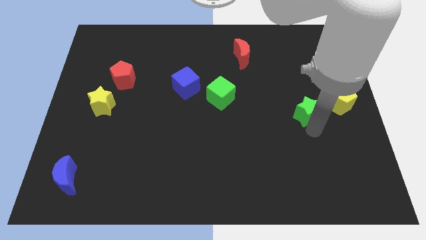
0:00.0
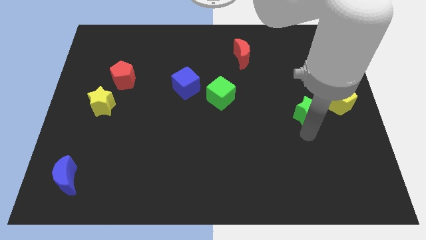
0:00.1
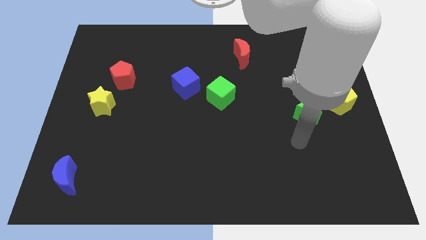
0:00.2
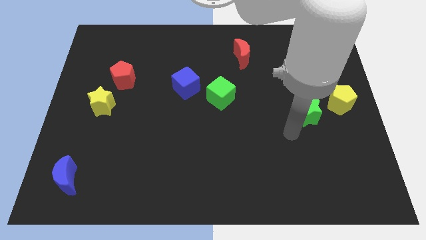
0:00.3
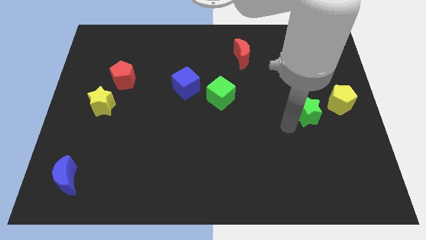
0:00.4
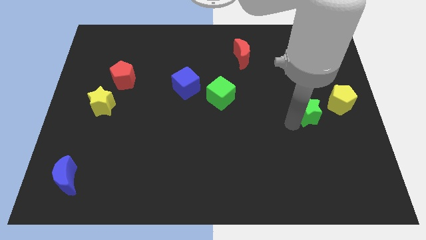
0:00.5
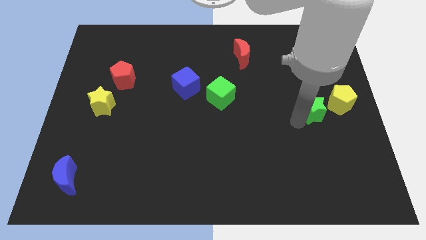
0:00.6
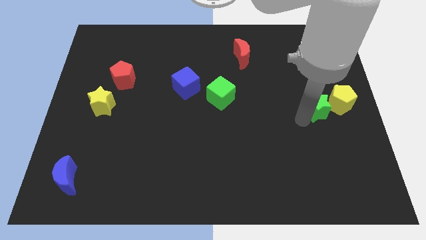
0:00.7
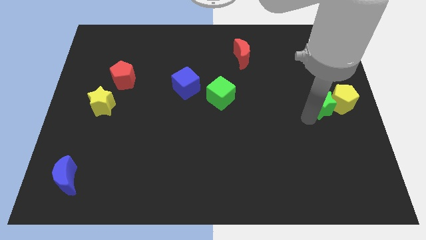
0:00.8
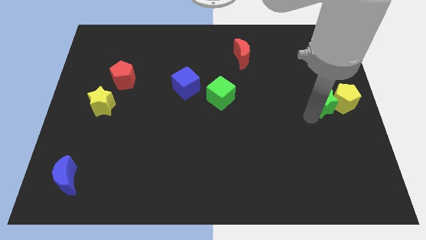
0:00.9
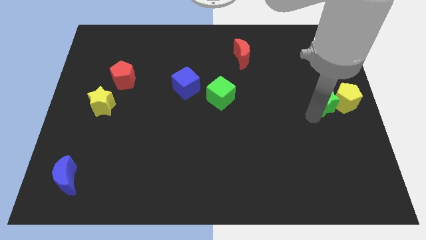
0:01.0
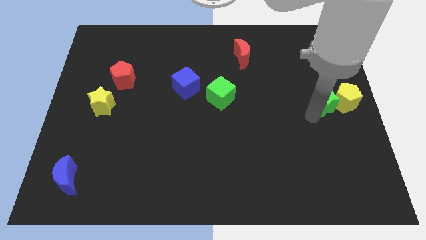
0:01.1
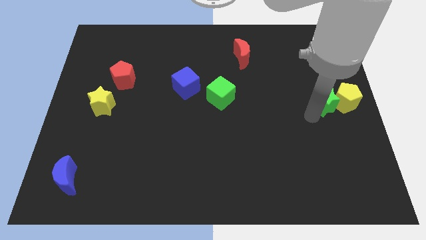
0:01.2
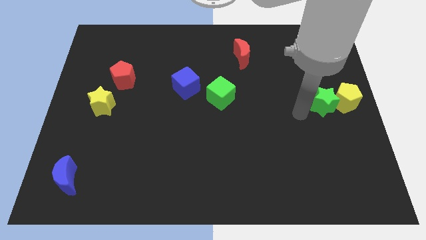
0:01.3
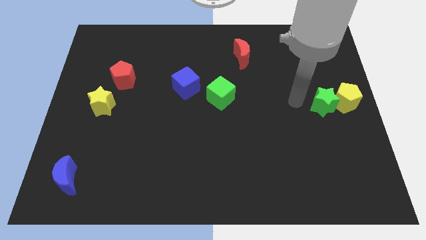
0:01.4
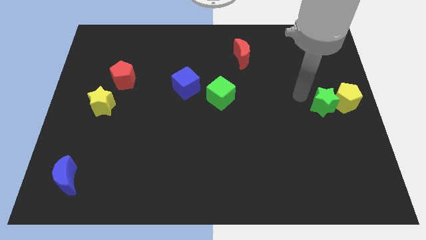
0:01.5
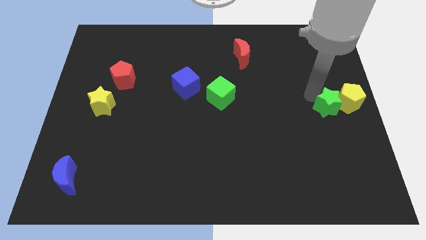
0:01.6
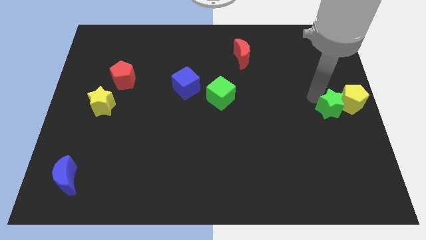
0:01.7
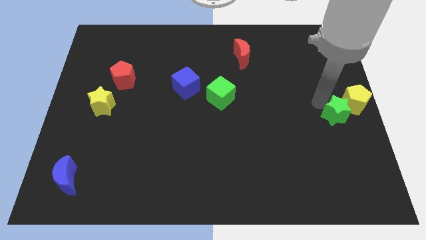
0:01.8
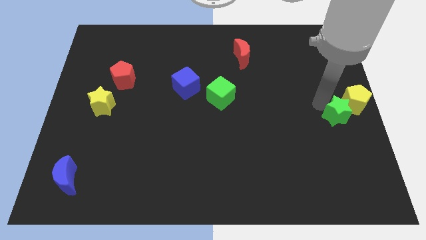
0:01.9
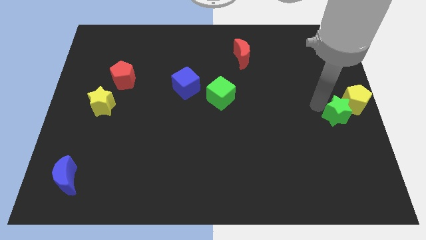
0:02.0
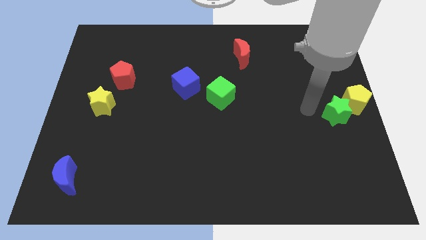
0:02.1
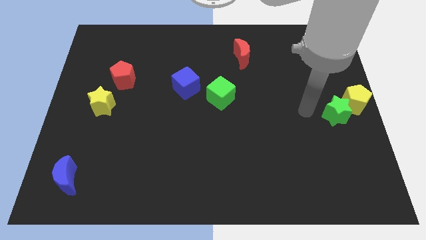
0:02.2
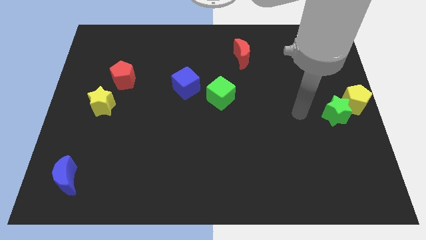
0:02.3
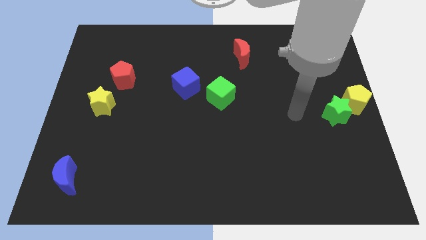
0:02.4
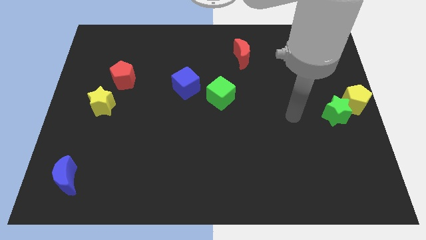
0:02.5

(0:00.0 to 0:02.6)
push the green star into the yellow pentagon

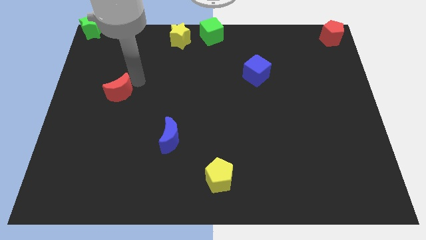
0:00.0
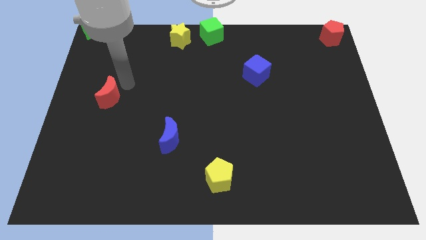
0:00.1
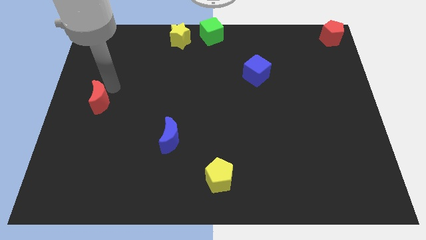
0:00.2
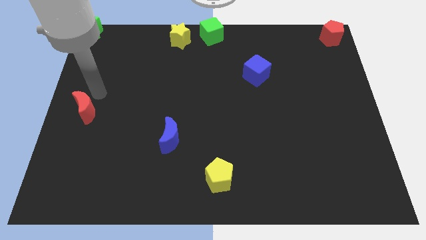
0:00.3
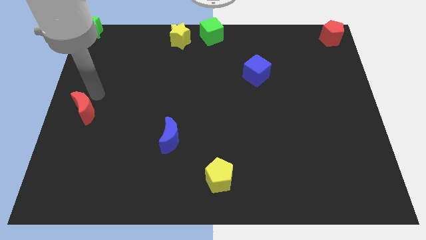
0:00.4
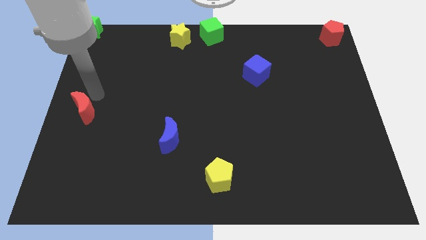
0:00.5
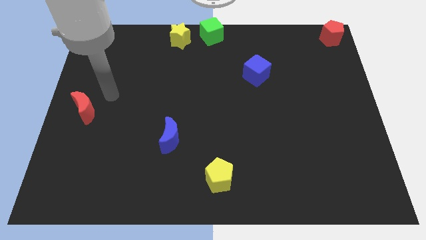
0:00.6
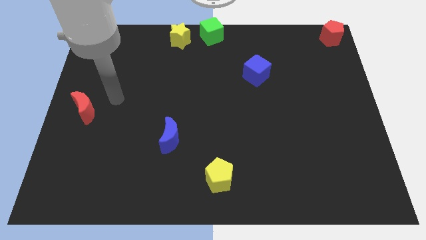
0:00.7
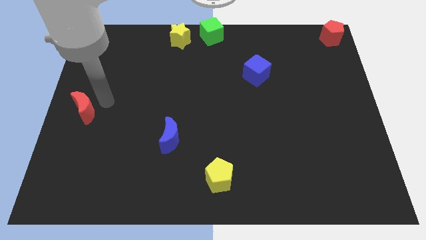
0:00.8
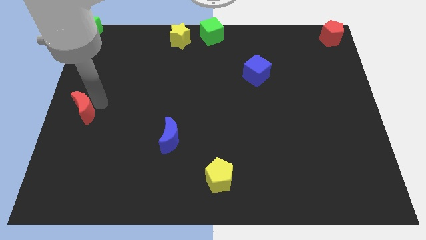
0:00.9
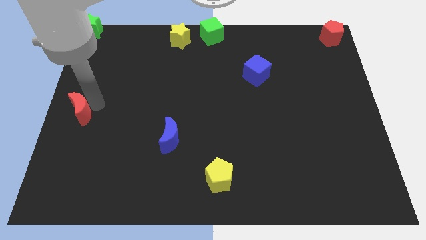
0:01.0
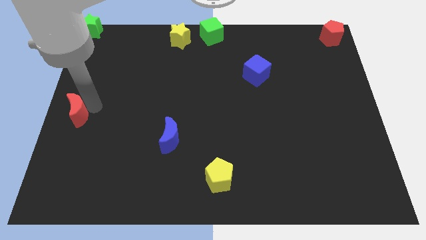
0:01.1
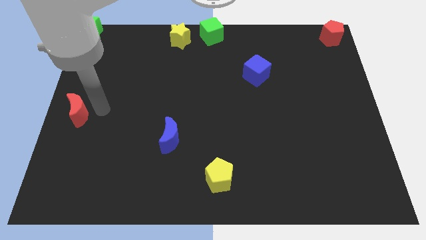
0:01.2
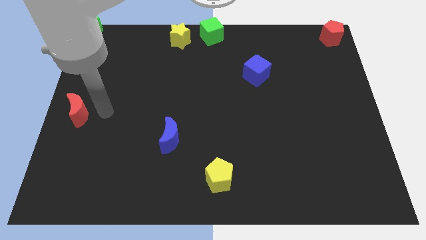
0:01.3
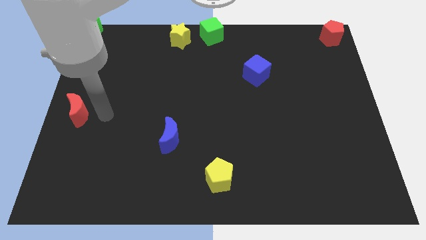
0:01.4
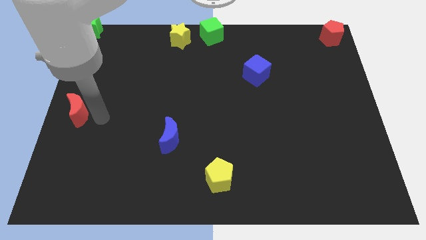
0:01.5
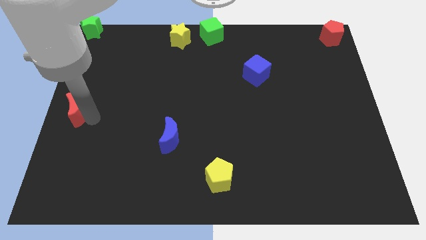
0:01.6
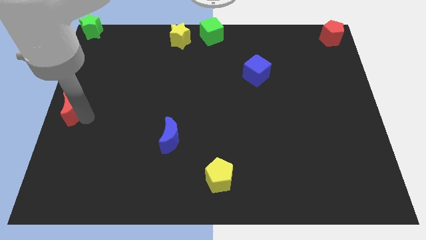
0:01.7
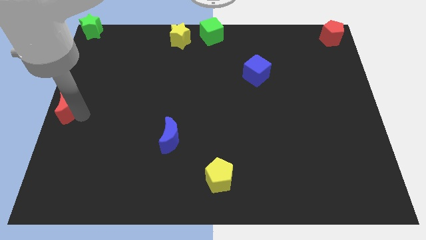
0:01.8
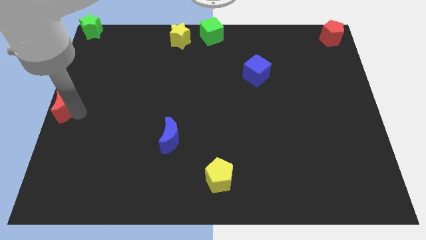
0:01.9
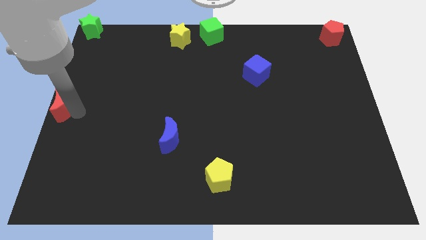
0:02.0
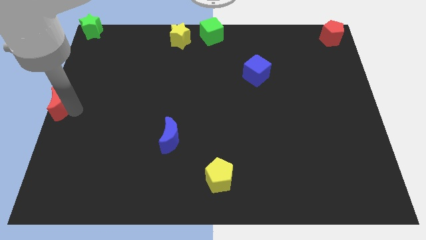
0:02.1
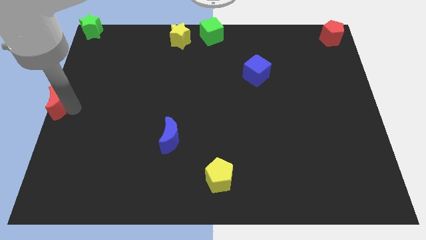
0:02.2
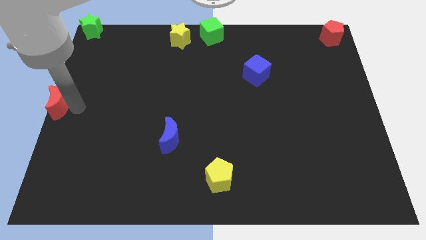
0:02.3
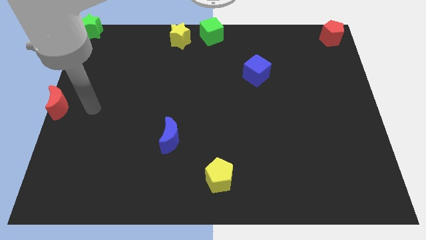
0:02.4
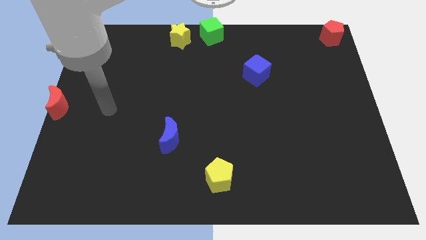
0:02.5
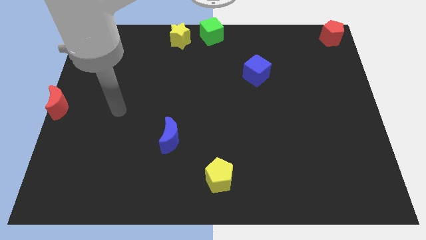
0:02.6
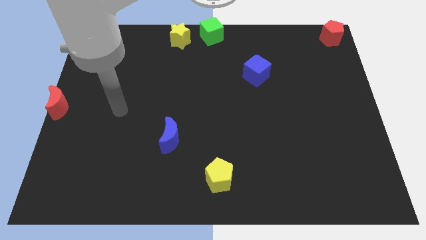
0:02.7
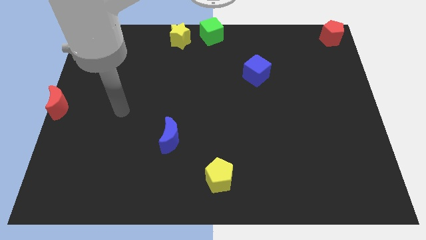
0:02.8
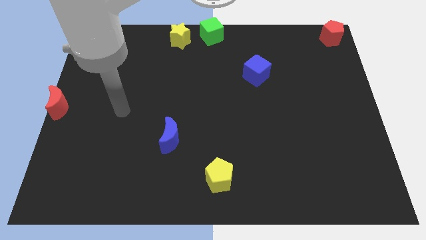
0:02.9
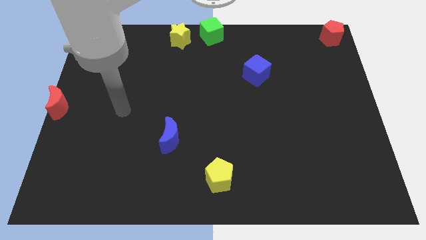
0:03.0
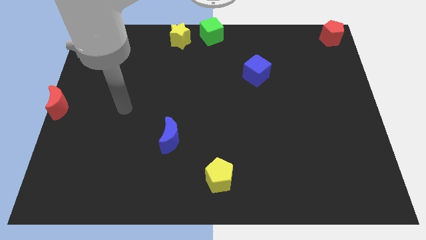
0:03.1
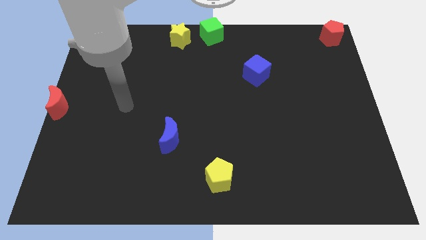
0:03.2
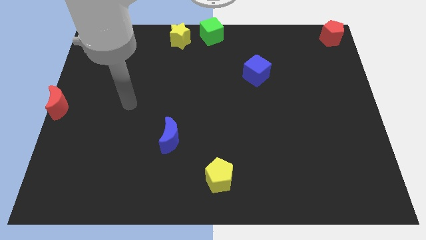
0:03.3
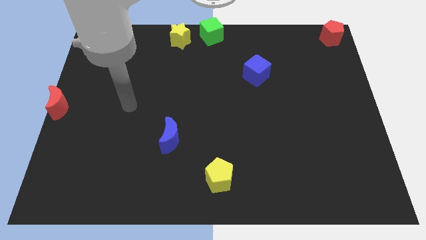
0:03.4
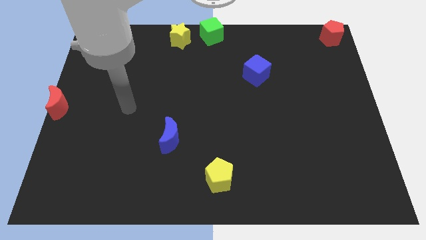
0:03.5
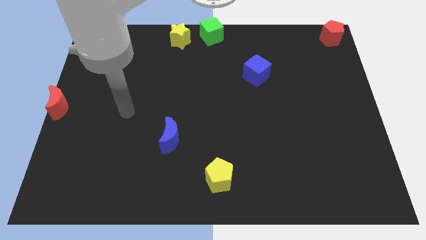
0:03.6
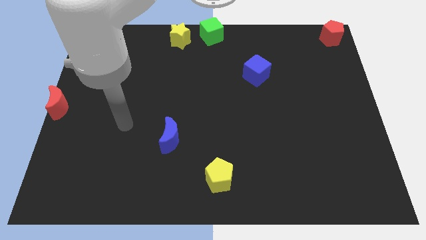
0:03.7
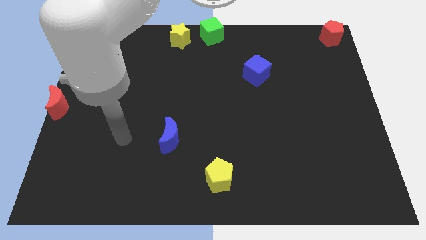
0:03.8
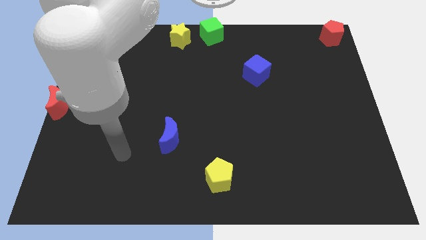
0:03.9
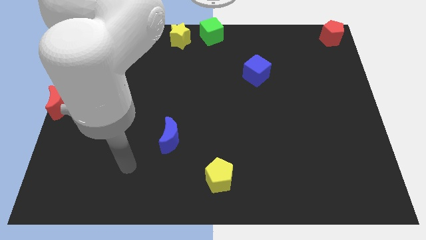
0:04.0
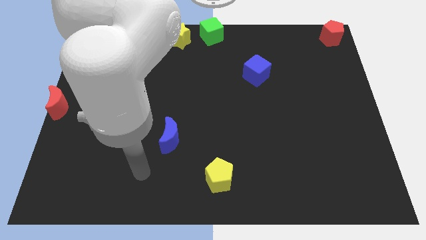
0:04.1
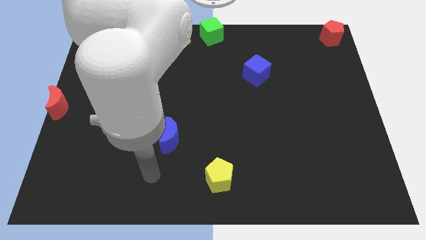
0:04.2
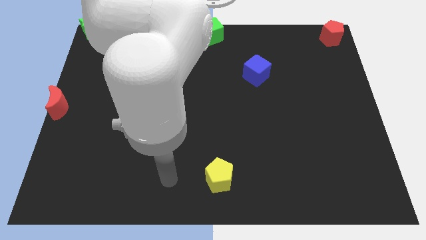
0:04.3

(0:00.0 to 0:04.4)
place the red moon at the left center of the board

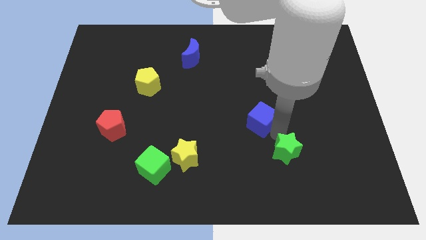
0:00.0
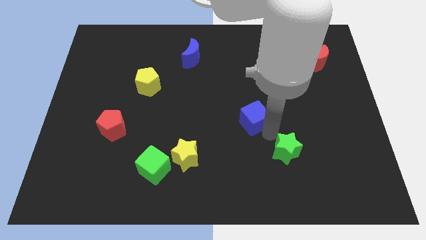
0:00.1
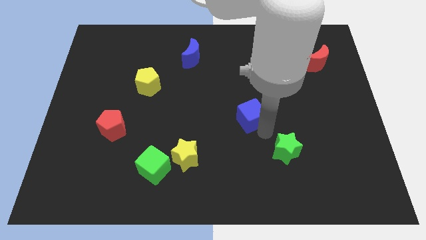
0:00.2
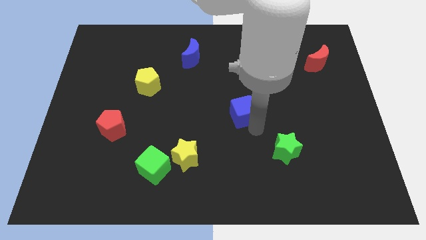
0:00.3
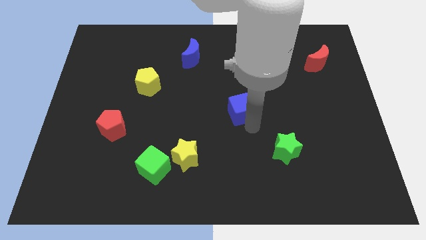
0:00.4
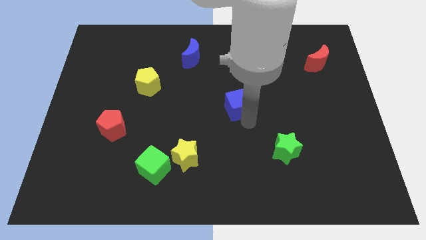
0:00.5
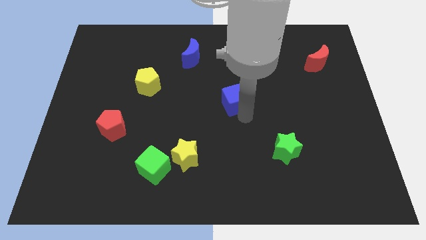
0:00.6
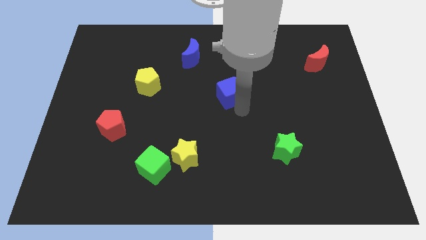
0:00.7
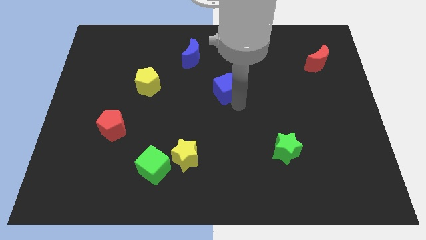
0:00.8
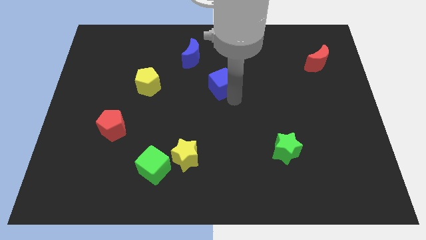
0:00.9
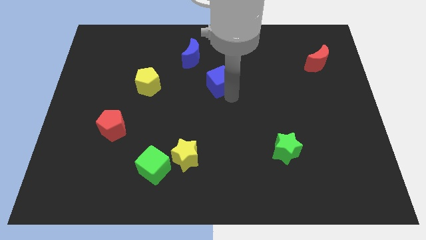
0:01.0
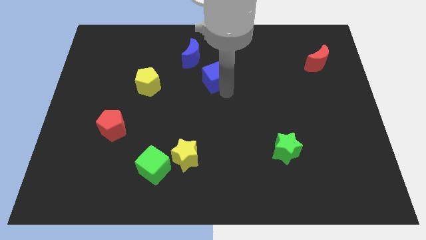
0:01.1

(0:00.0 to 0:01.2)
push the blue cube towards the top side of the board

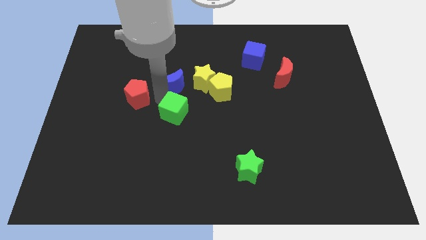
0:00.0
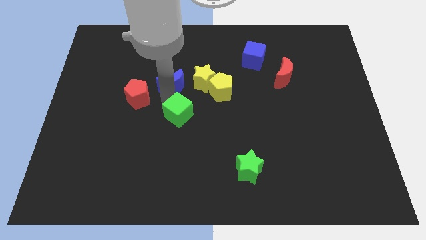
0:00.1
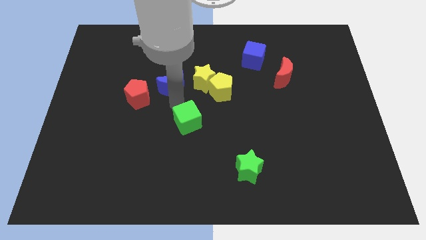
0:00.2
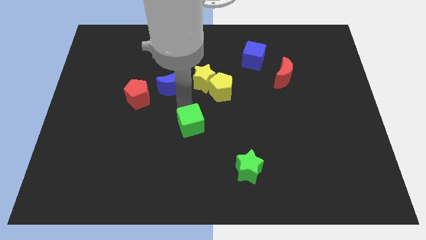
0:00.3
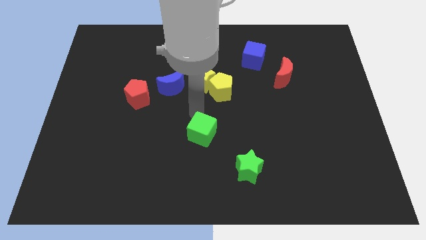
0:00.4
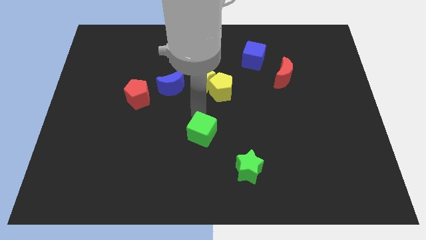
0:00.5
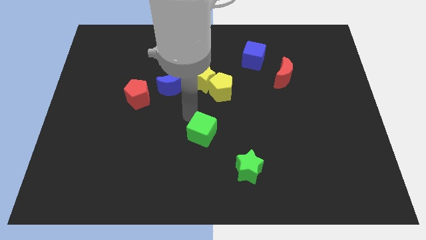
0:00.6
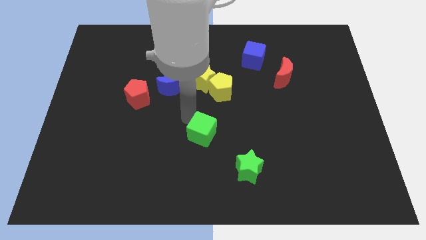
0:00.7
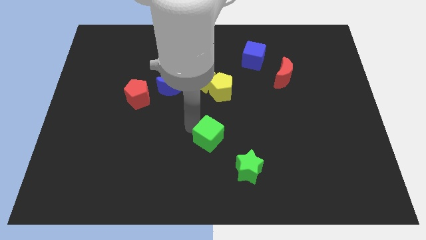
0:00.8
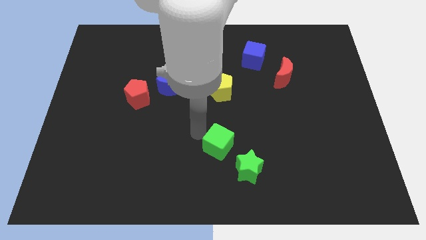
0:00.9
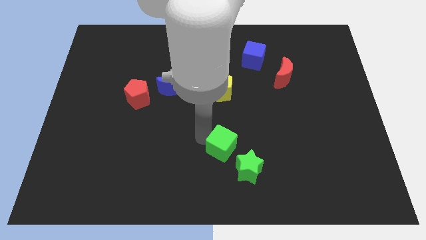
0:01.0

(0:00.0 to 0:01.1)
place the green cube above the green star
